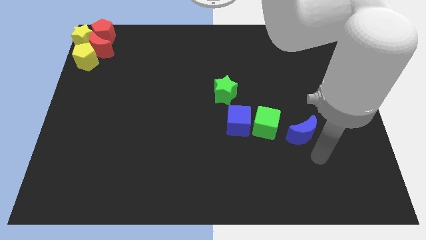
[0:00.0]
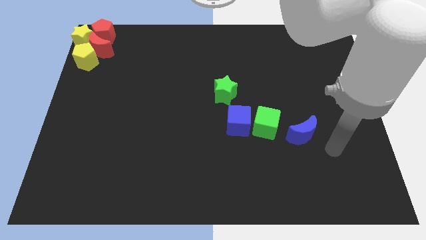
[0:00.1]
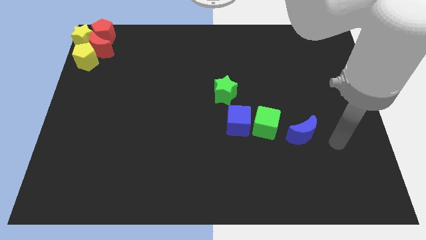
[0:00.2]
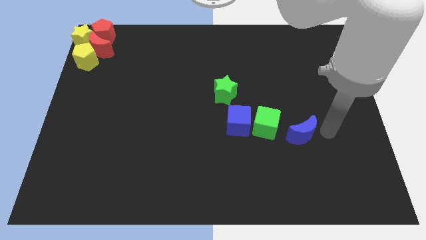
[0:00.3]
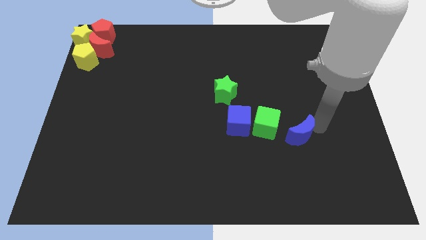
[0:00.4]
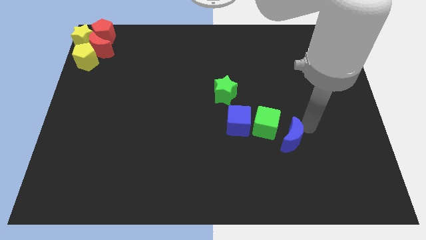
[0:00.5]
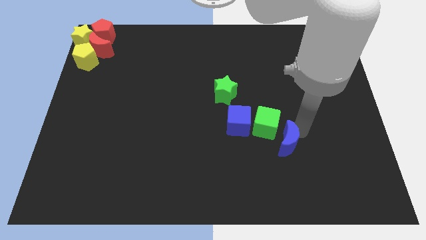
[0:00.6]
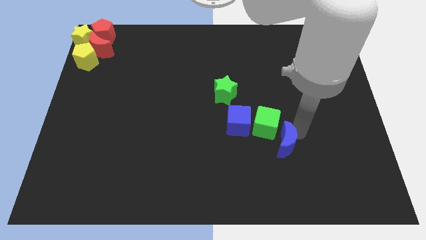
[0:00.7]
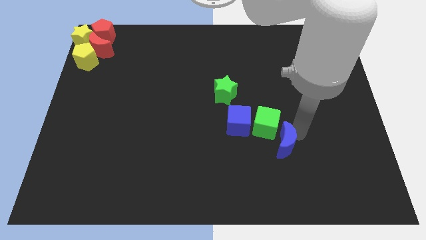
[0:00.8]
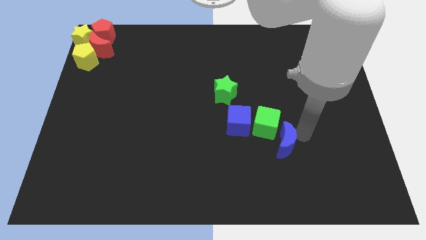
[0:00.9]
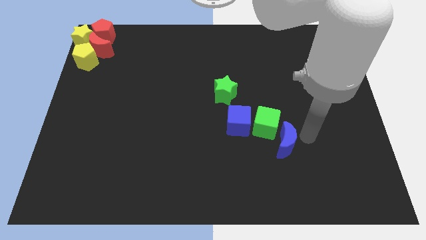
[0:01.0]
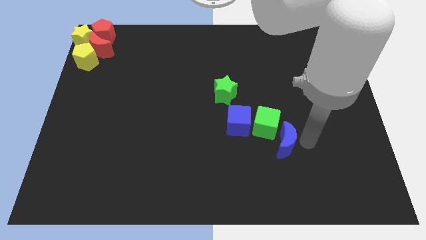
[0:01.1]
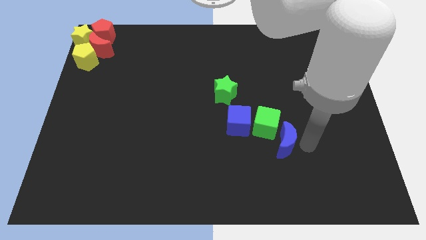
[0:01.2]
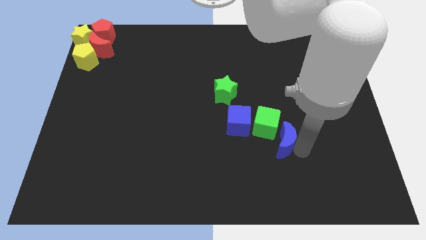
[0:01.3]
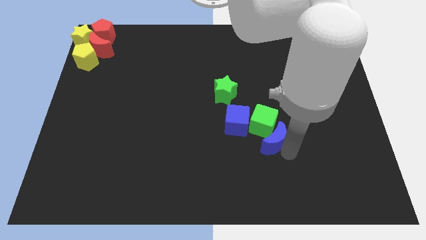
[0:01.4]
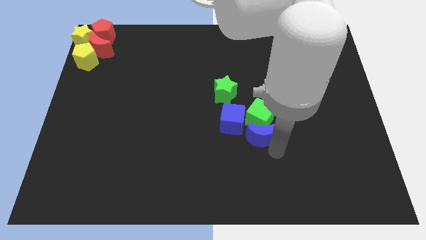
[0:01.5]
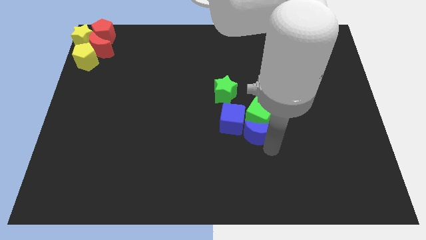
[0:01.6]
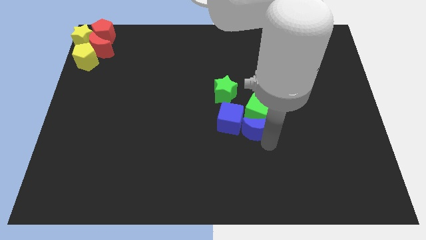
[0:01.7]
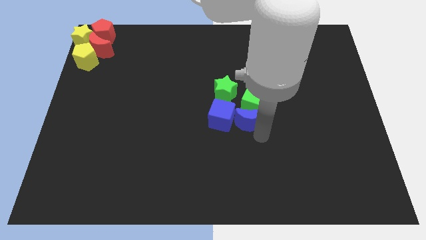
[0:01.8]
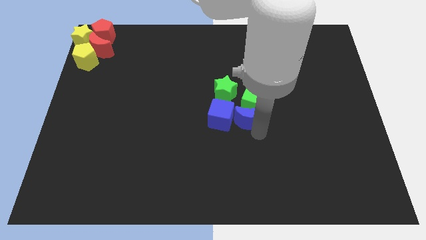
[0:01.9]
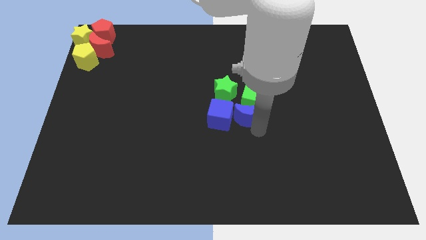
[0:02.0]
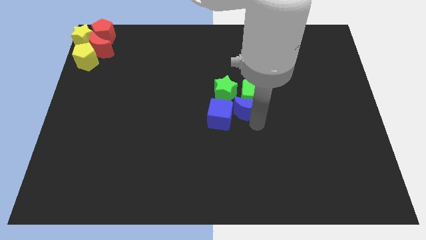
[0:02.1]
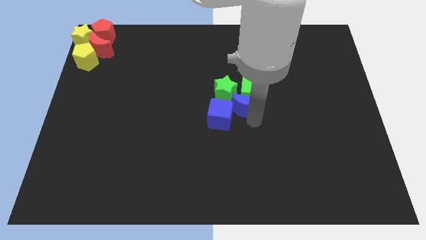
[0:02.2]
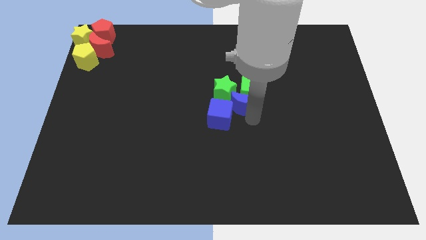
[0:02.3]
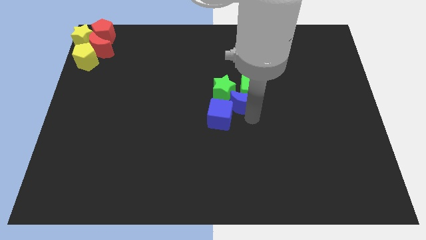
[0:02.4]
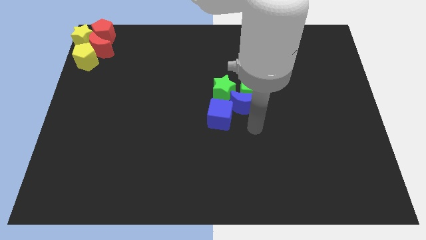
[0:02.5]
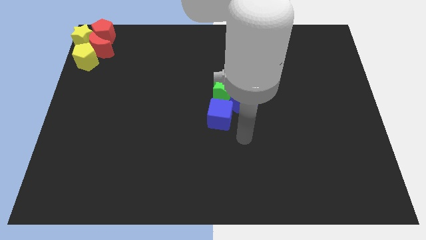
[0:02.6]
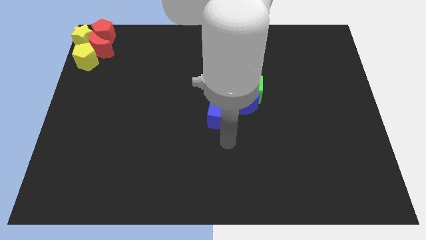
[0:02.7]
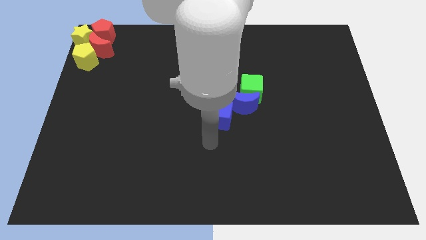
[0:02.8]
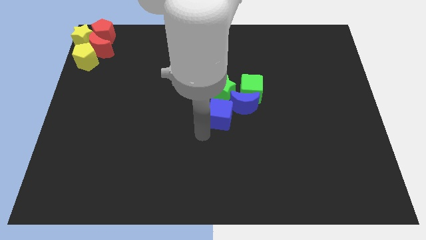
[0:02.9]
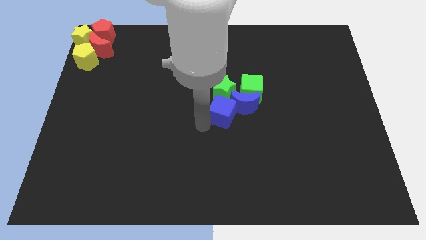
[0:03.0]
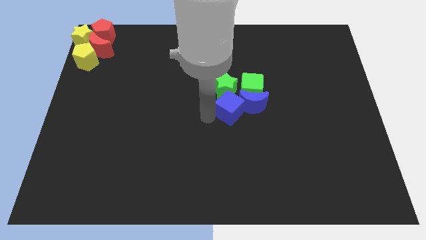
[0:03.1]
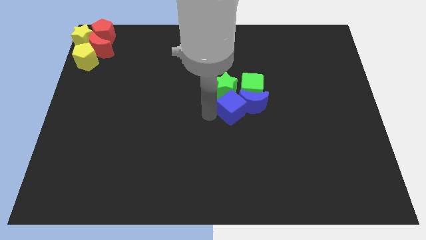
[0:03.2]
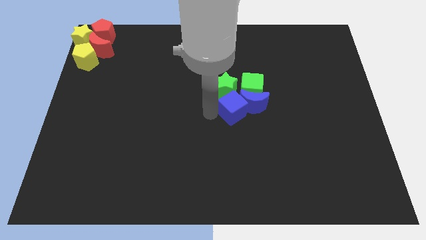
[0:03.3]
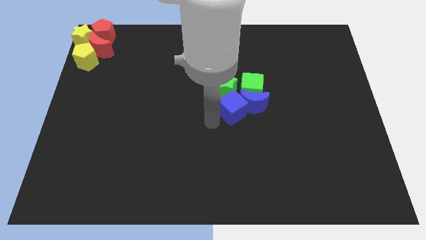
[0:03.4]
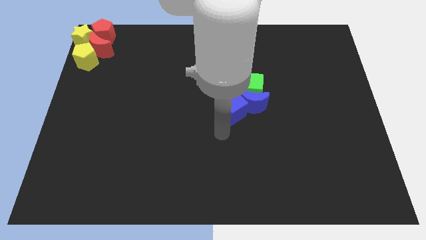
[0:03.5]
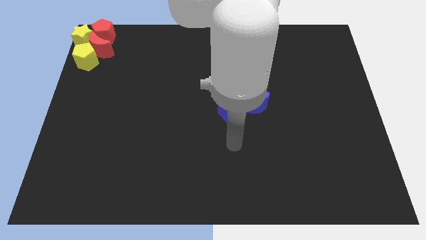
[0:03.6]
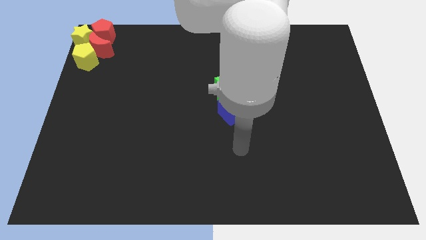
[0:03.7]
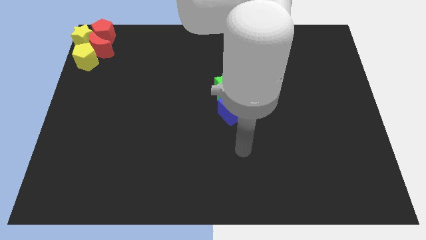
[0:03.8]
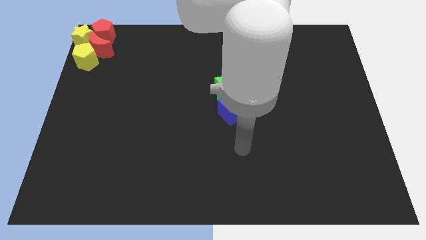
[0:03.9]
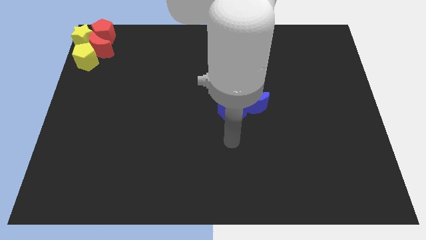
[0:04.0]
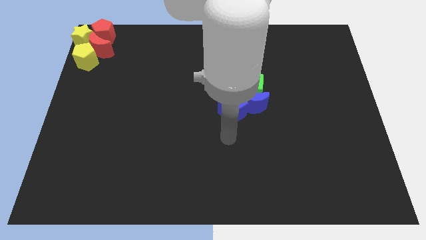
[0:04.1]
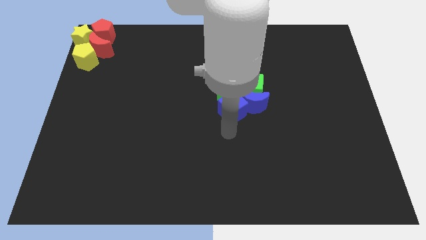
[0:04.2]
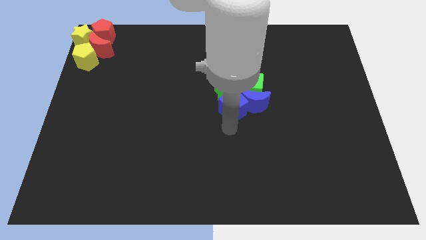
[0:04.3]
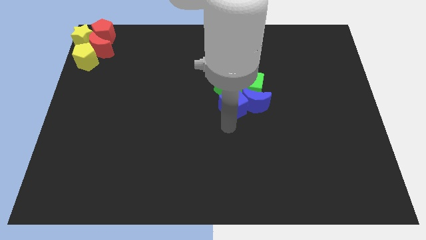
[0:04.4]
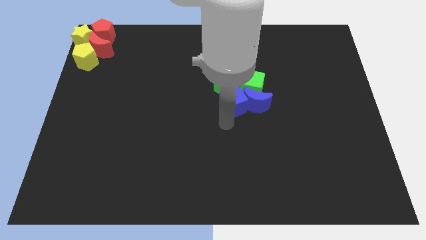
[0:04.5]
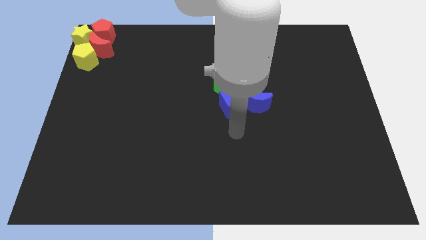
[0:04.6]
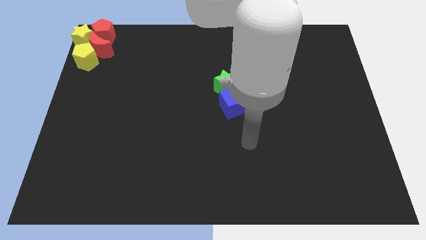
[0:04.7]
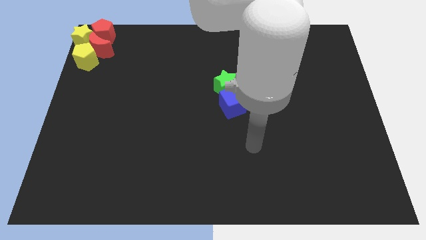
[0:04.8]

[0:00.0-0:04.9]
push all the green and blue blocks in the center

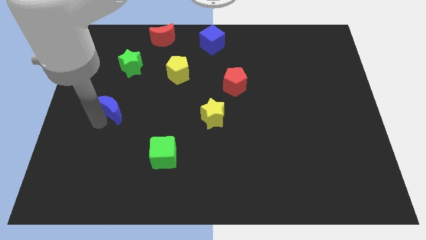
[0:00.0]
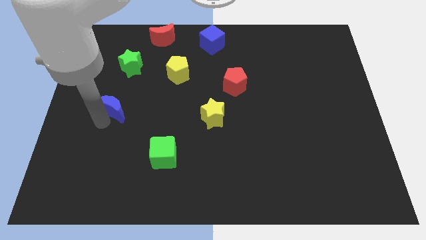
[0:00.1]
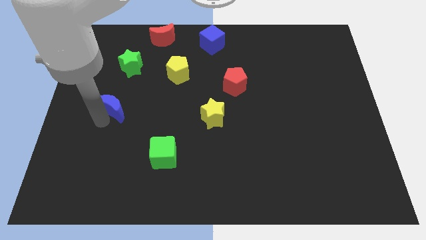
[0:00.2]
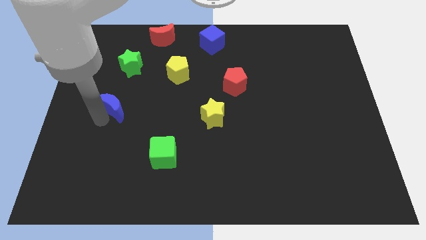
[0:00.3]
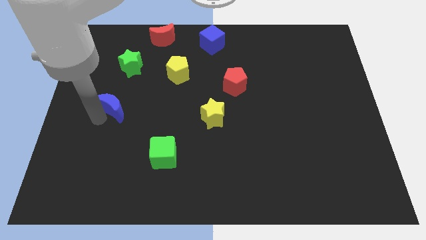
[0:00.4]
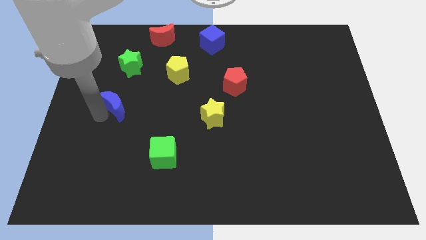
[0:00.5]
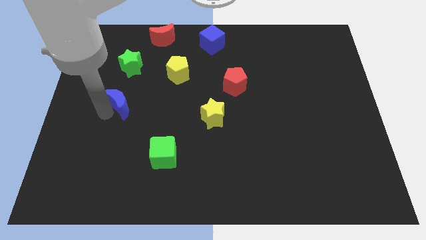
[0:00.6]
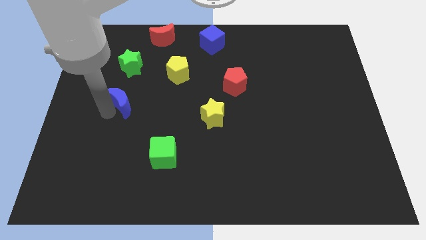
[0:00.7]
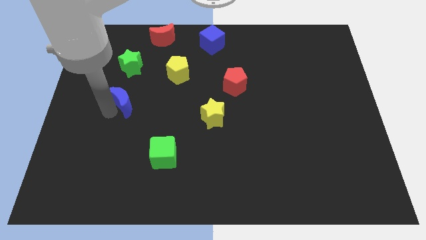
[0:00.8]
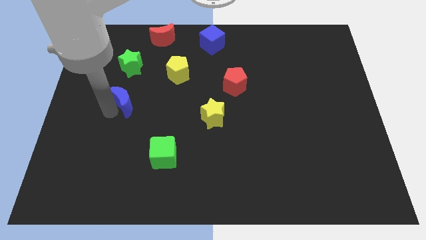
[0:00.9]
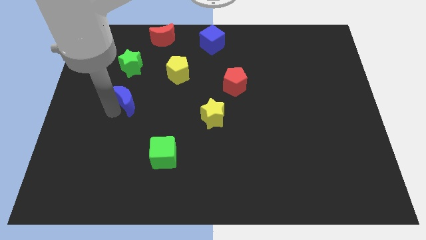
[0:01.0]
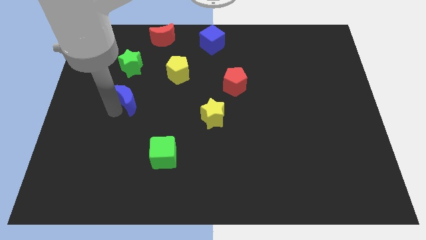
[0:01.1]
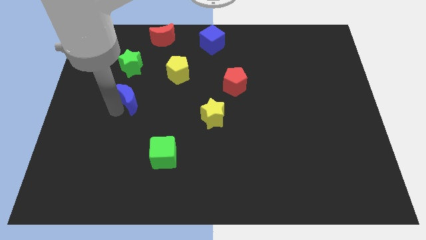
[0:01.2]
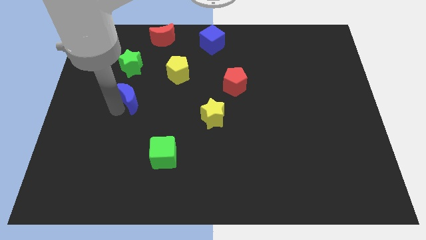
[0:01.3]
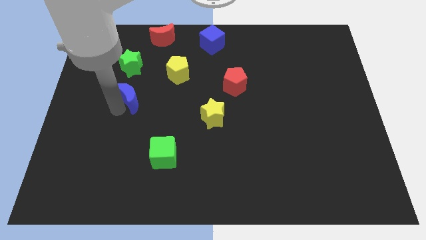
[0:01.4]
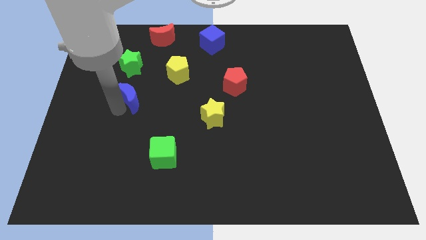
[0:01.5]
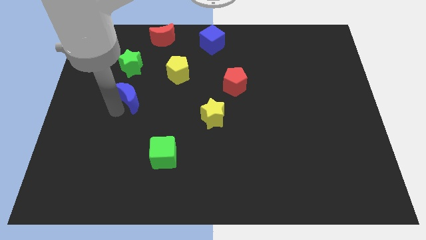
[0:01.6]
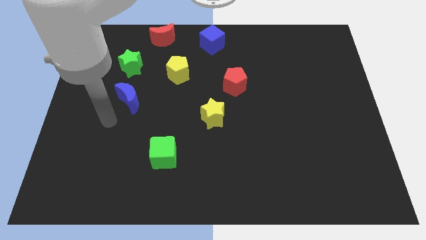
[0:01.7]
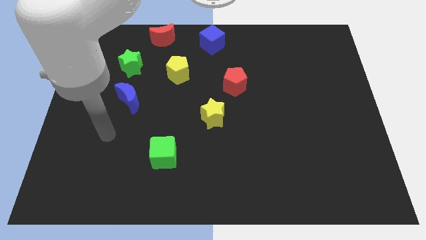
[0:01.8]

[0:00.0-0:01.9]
place the blue moon below the green star

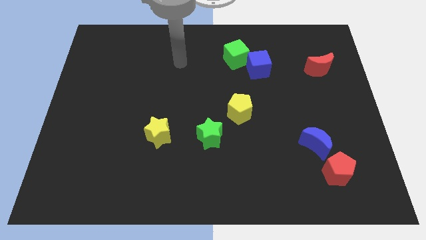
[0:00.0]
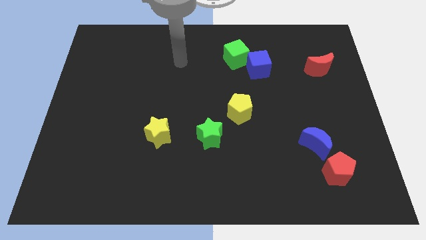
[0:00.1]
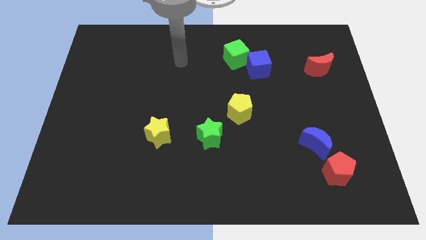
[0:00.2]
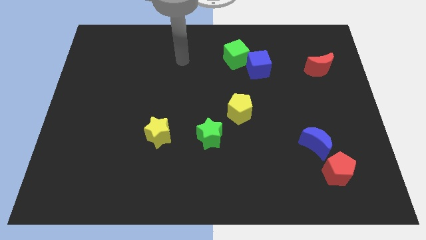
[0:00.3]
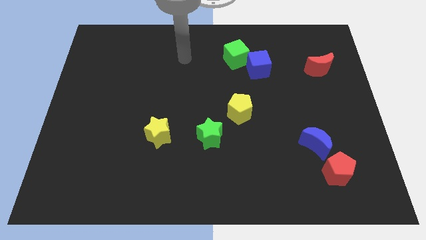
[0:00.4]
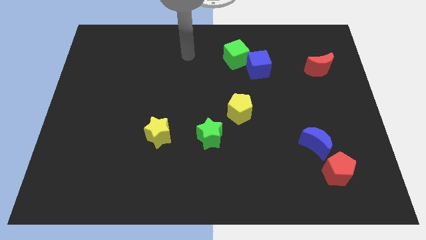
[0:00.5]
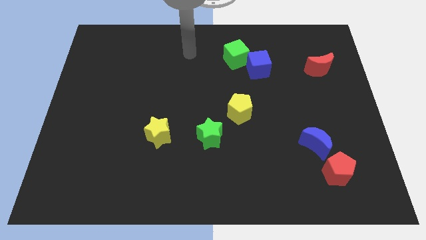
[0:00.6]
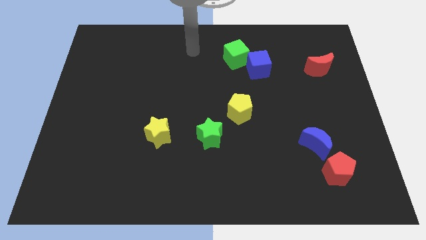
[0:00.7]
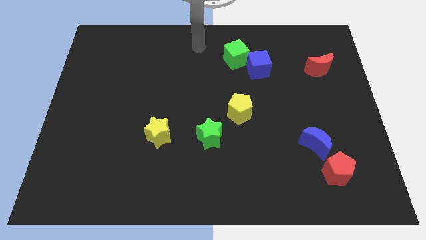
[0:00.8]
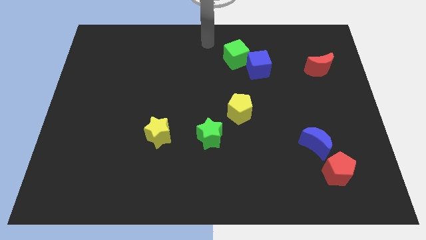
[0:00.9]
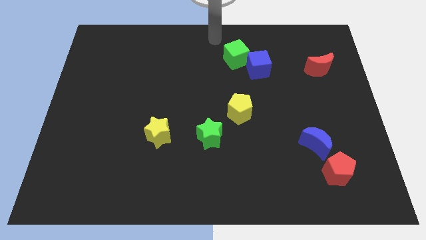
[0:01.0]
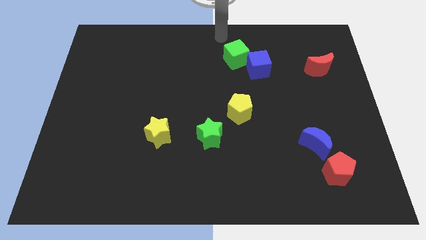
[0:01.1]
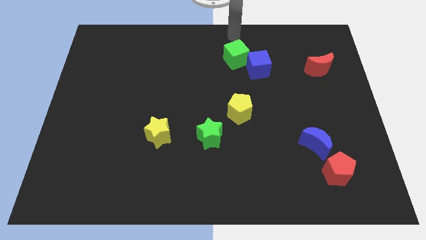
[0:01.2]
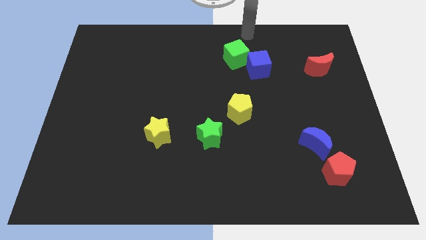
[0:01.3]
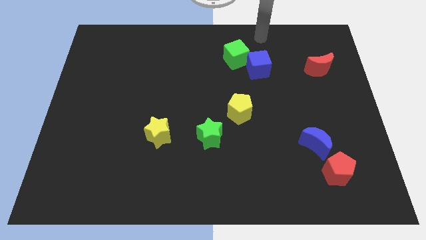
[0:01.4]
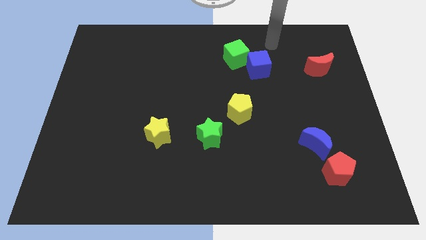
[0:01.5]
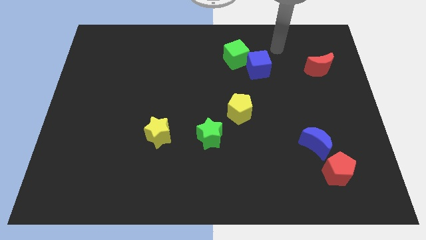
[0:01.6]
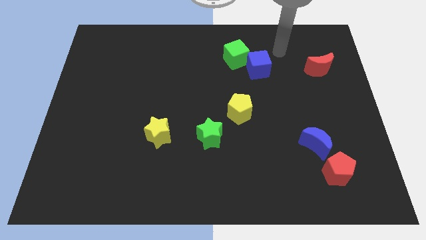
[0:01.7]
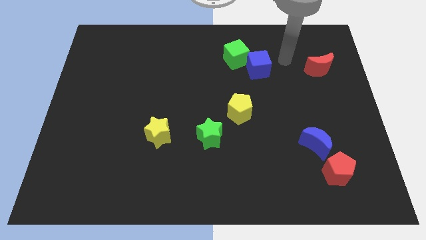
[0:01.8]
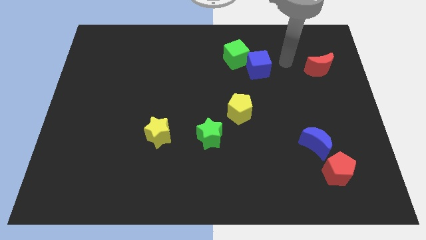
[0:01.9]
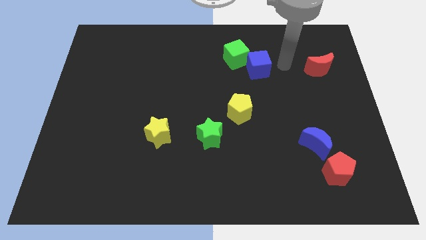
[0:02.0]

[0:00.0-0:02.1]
point your arm to the right of blue cube

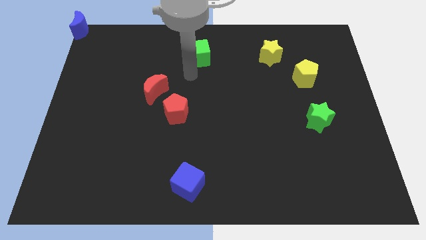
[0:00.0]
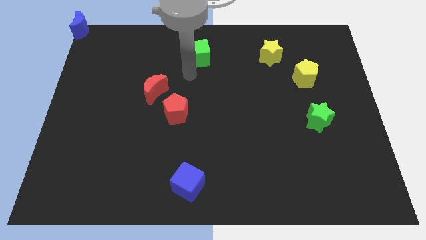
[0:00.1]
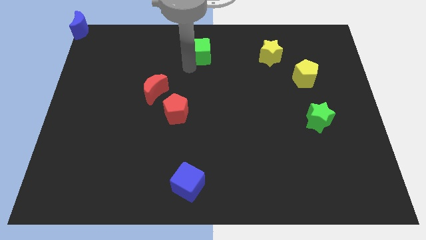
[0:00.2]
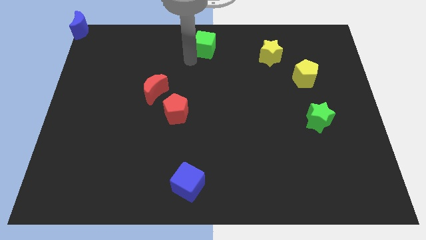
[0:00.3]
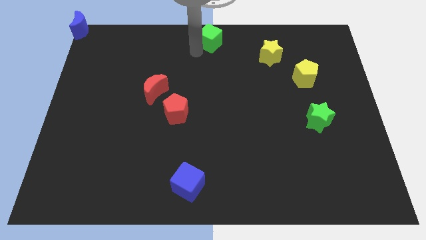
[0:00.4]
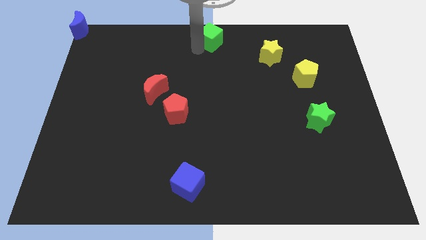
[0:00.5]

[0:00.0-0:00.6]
put the green cube at the top center of the board
